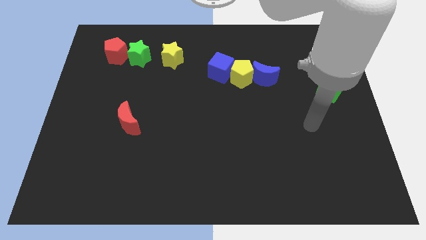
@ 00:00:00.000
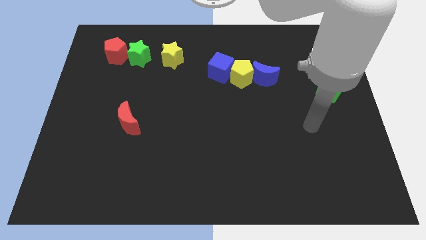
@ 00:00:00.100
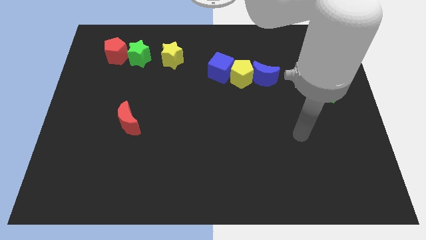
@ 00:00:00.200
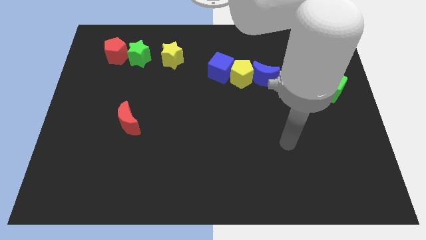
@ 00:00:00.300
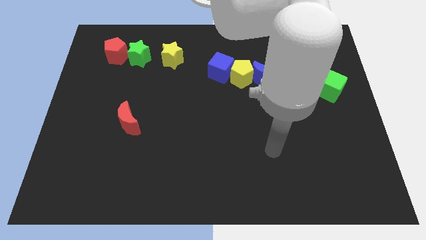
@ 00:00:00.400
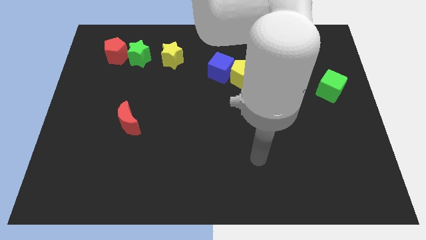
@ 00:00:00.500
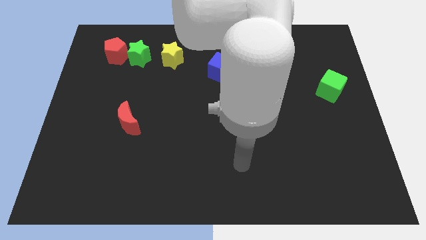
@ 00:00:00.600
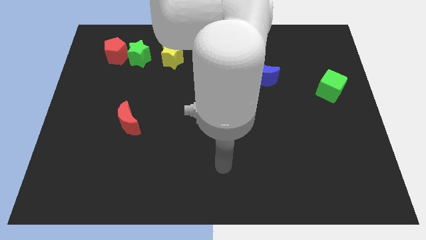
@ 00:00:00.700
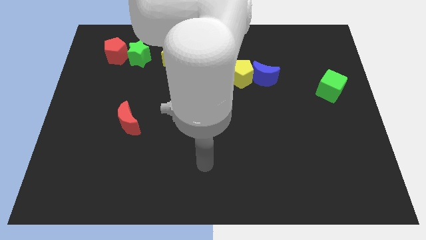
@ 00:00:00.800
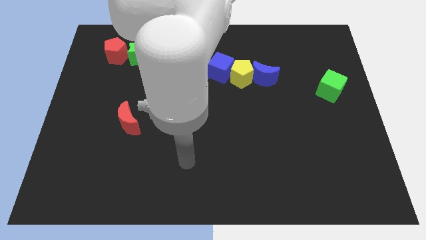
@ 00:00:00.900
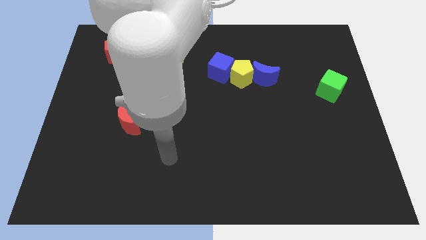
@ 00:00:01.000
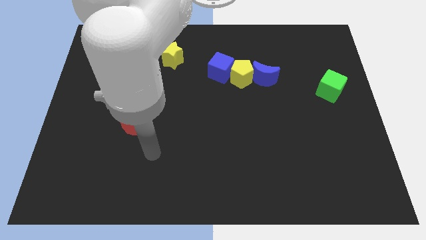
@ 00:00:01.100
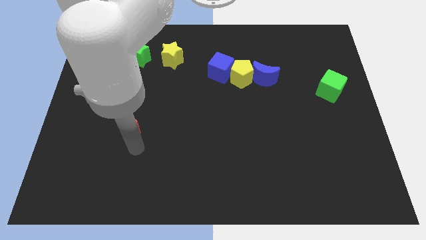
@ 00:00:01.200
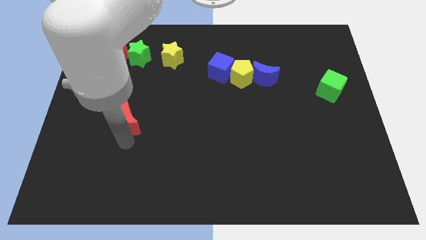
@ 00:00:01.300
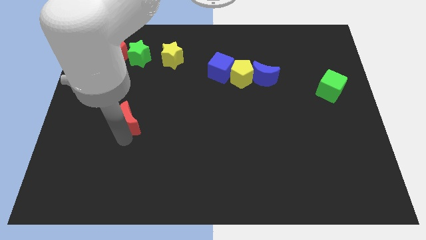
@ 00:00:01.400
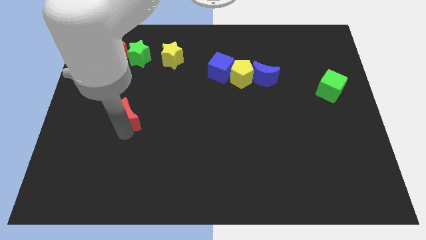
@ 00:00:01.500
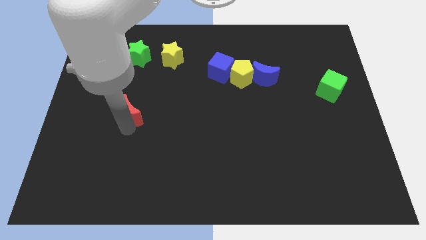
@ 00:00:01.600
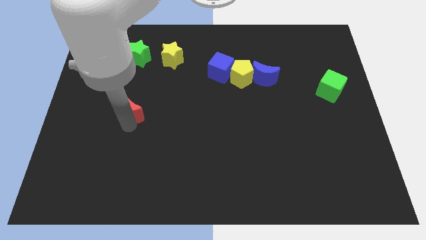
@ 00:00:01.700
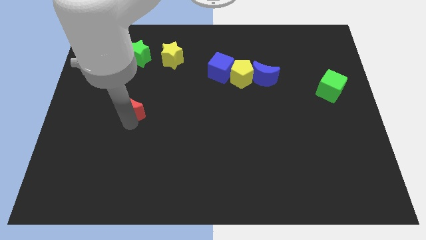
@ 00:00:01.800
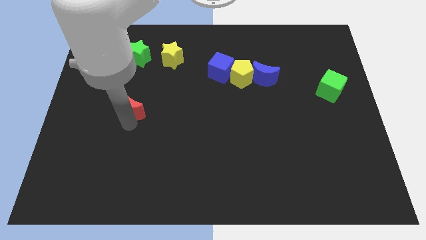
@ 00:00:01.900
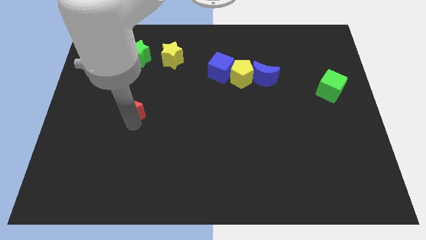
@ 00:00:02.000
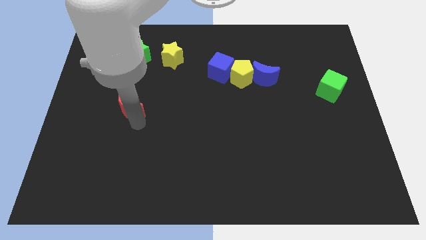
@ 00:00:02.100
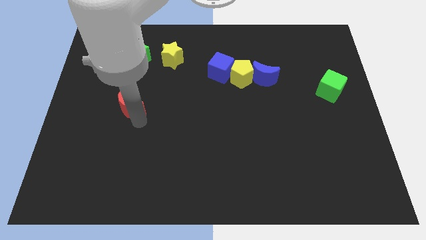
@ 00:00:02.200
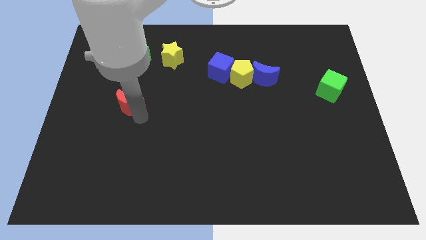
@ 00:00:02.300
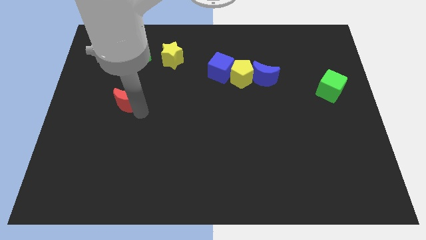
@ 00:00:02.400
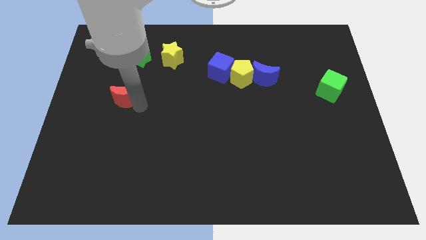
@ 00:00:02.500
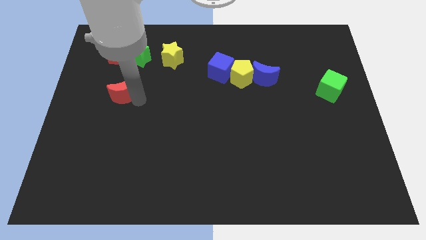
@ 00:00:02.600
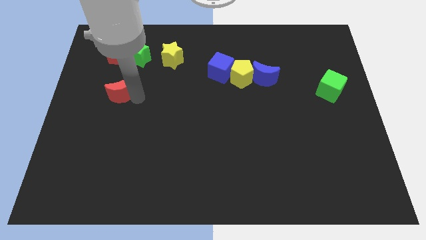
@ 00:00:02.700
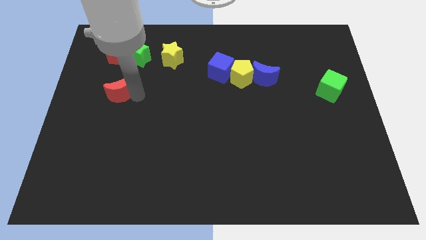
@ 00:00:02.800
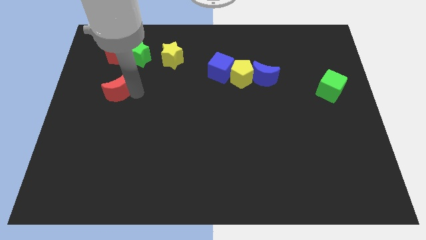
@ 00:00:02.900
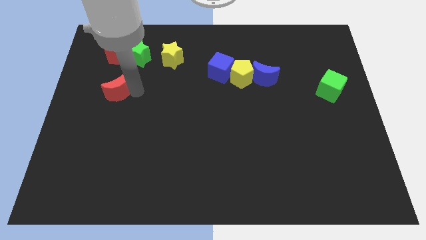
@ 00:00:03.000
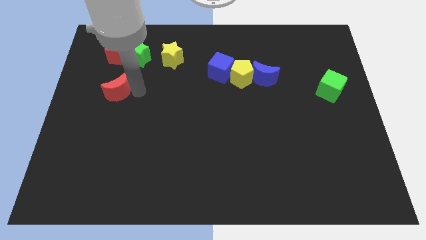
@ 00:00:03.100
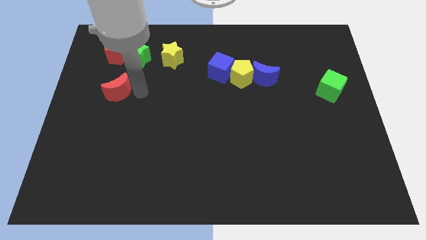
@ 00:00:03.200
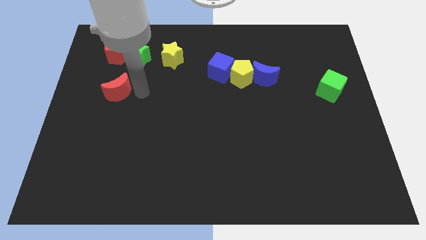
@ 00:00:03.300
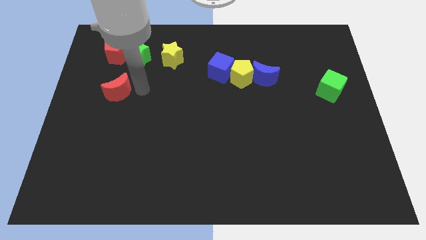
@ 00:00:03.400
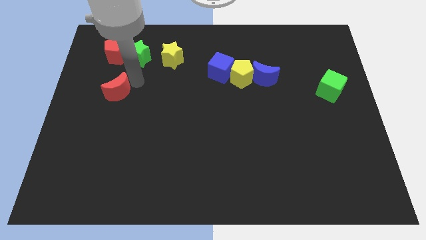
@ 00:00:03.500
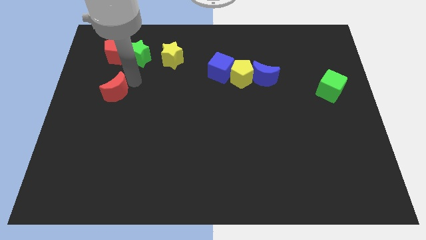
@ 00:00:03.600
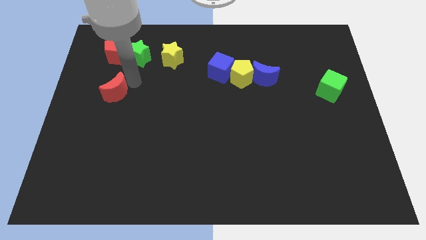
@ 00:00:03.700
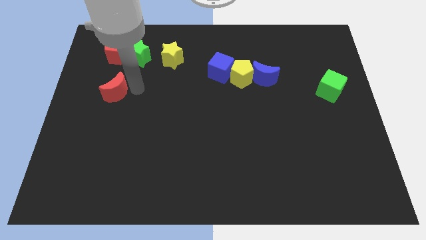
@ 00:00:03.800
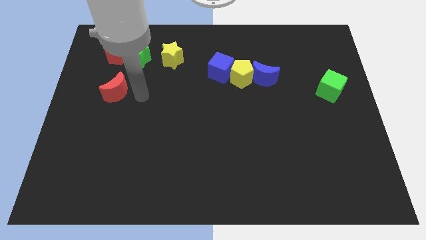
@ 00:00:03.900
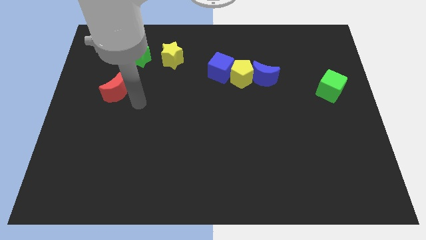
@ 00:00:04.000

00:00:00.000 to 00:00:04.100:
slide red moon below red pentagon

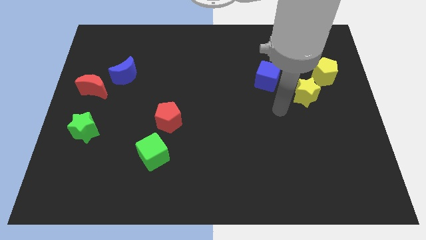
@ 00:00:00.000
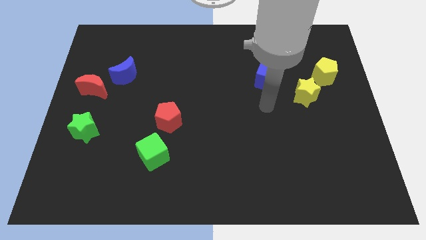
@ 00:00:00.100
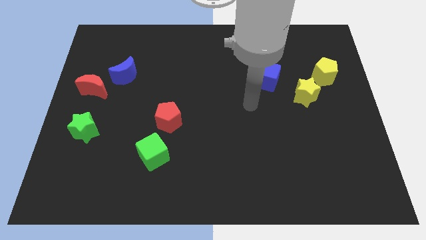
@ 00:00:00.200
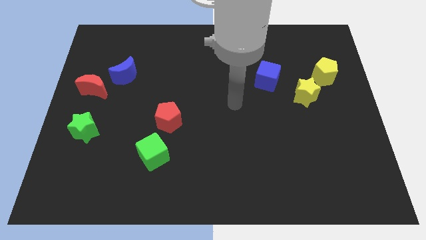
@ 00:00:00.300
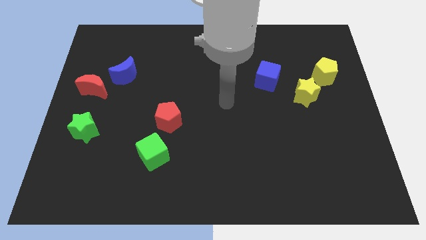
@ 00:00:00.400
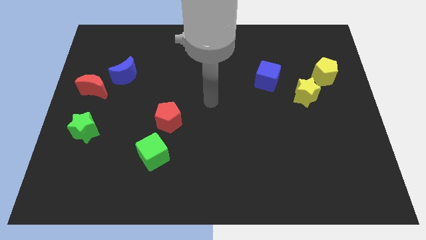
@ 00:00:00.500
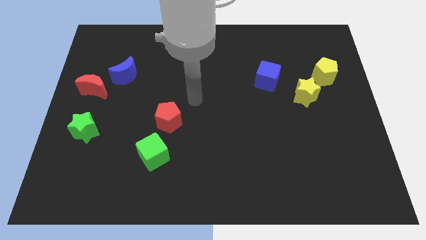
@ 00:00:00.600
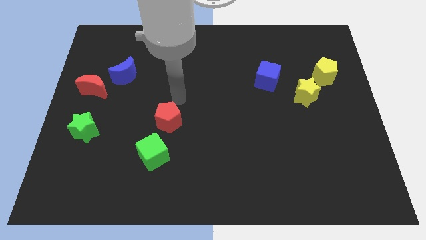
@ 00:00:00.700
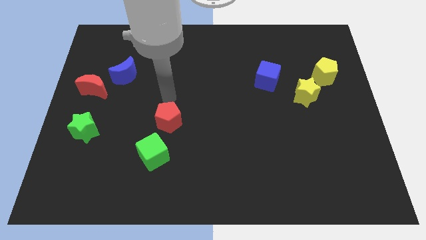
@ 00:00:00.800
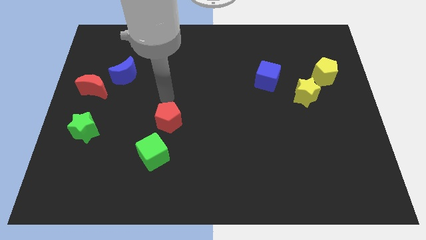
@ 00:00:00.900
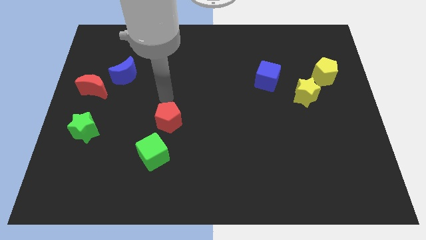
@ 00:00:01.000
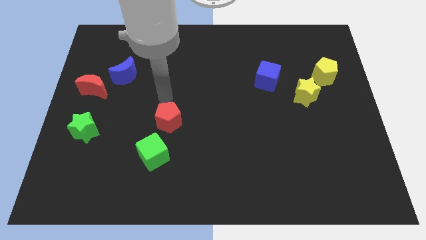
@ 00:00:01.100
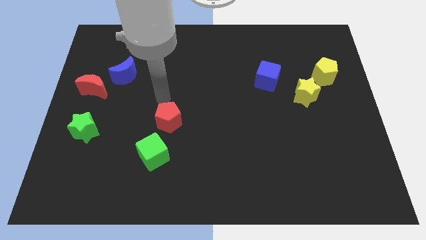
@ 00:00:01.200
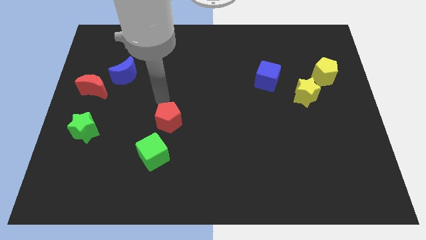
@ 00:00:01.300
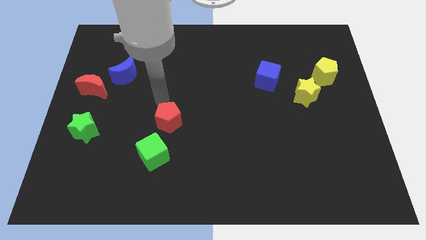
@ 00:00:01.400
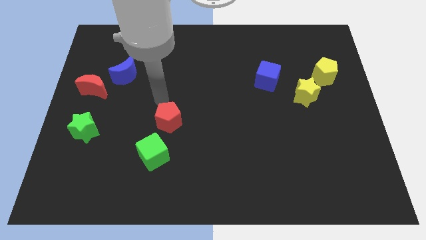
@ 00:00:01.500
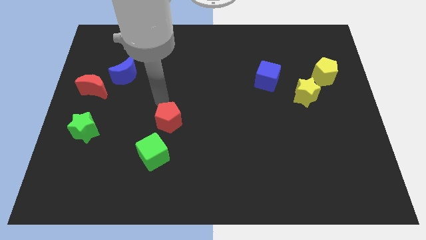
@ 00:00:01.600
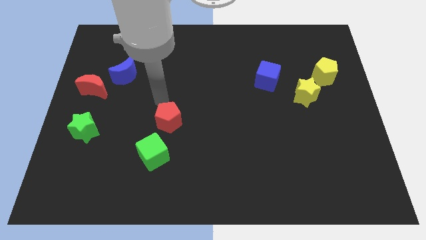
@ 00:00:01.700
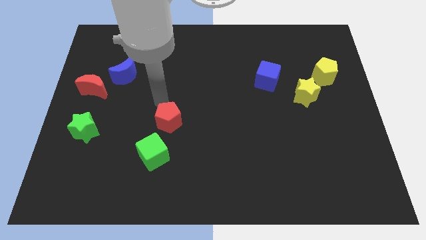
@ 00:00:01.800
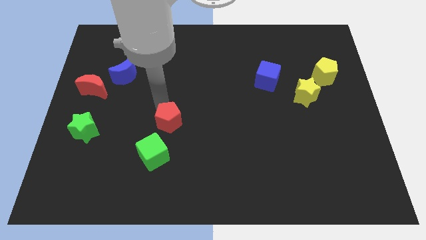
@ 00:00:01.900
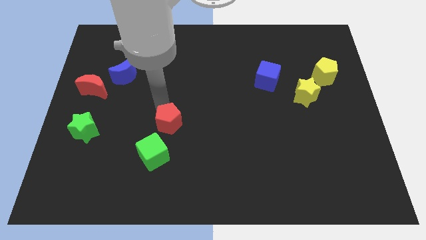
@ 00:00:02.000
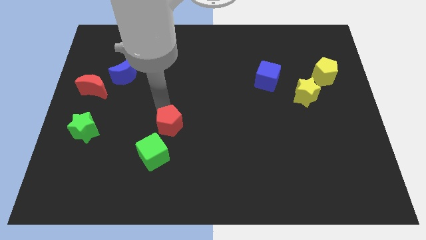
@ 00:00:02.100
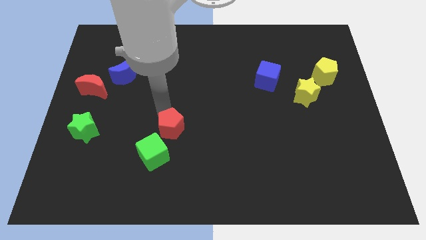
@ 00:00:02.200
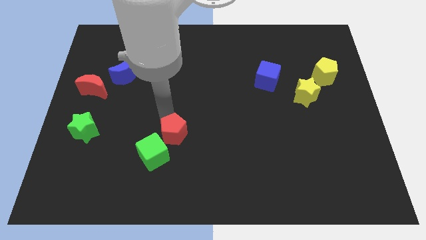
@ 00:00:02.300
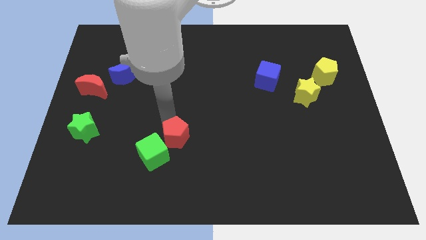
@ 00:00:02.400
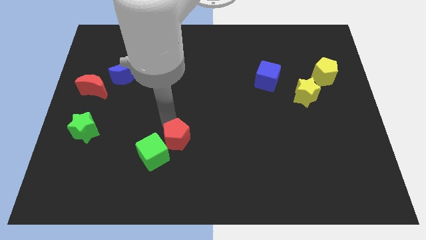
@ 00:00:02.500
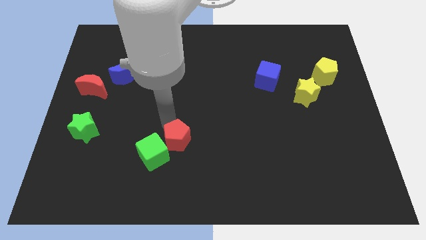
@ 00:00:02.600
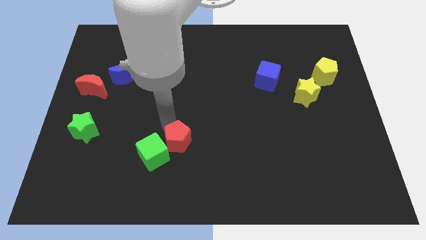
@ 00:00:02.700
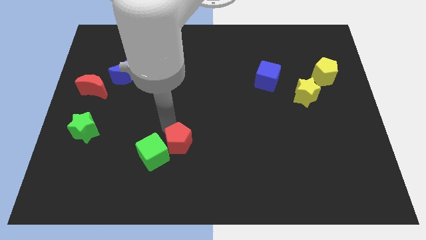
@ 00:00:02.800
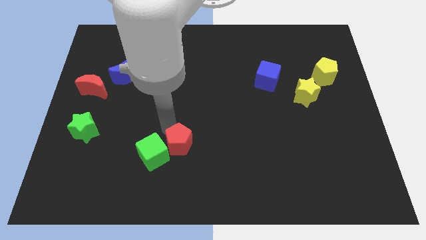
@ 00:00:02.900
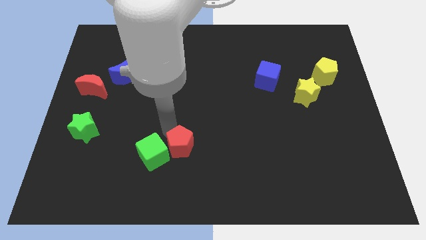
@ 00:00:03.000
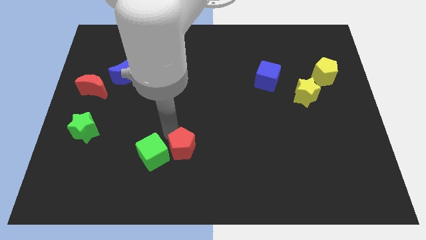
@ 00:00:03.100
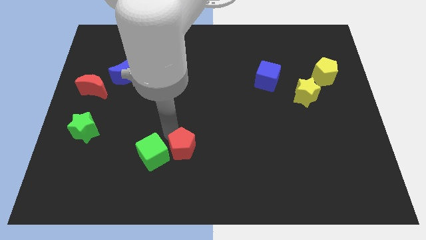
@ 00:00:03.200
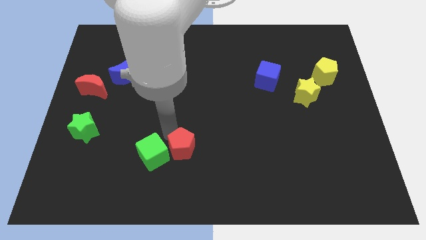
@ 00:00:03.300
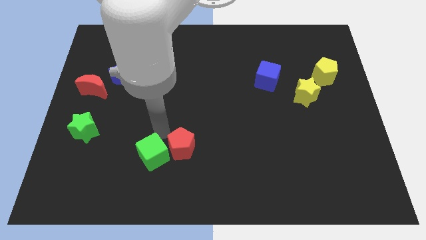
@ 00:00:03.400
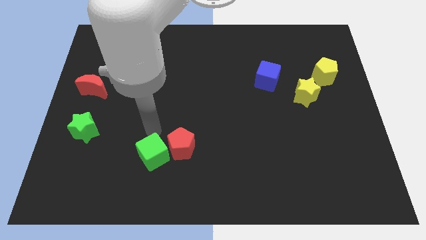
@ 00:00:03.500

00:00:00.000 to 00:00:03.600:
move the red pentagon parallel to the green cube

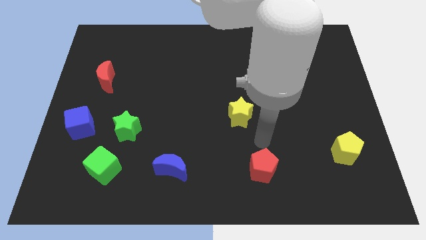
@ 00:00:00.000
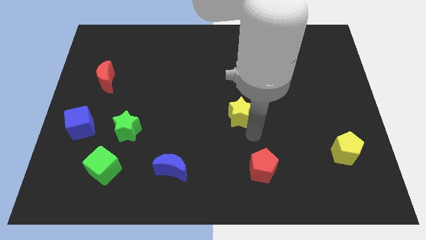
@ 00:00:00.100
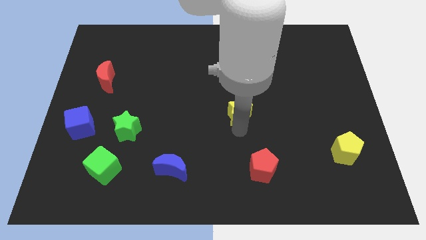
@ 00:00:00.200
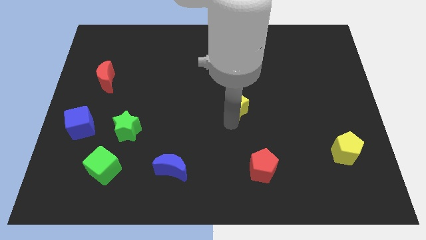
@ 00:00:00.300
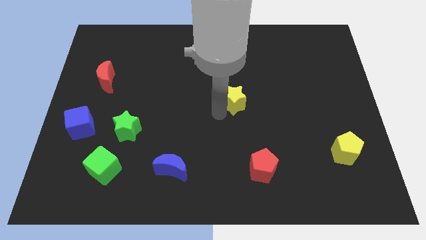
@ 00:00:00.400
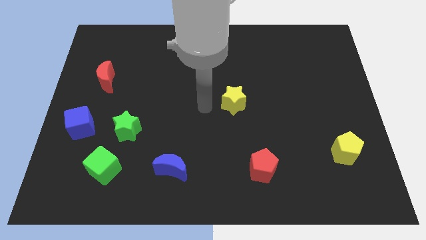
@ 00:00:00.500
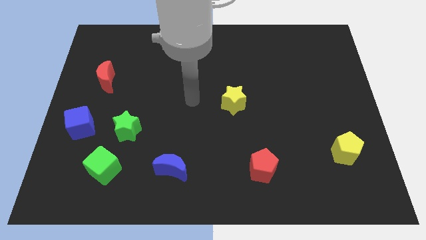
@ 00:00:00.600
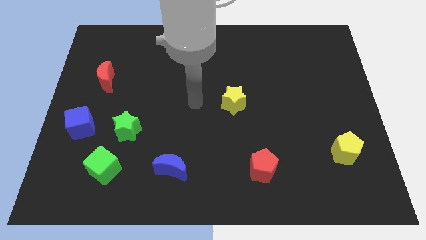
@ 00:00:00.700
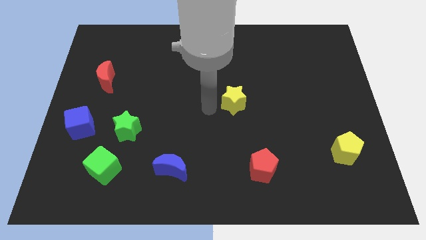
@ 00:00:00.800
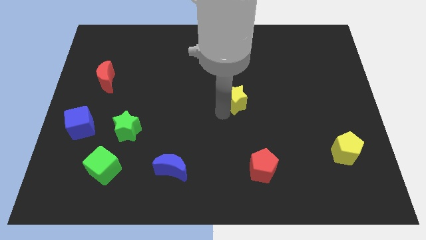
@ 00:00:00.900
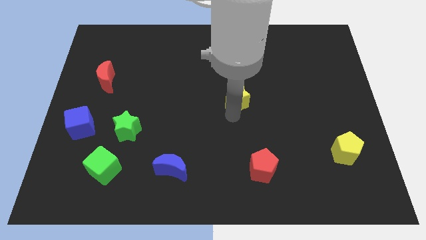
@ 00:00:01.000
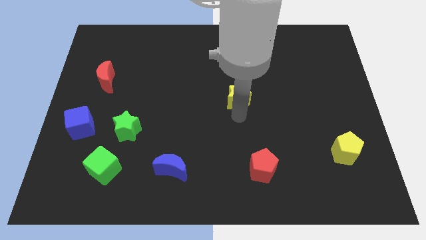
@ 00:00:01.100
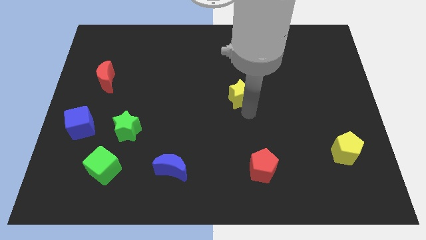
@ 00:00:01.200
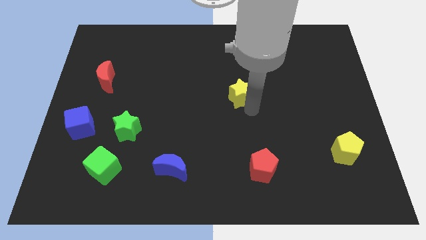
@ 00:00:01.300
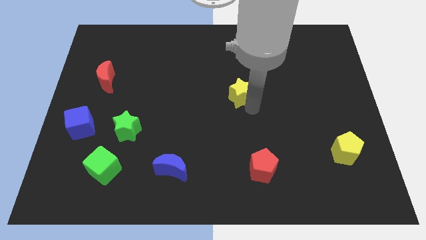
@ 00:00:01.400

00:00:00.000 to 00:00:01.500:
drag the yellow star towards the center of the board
